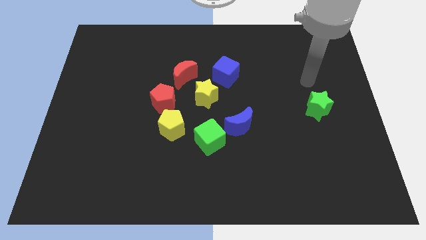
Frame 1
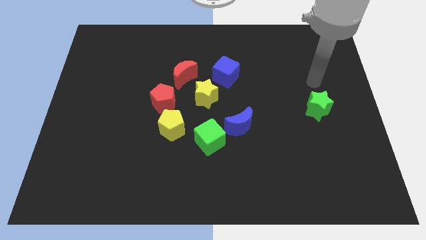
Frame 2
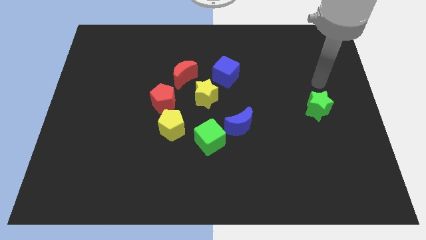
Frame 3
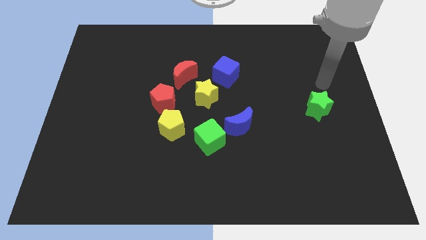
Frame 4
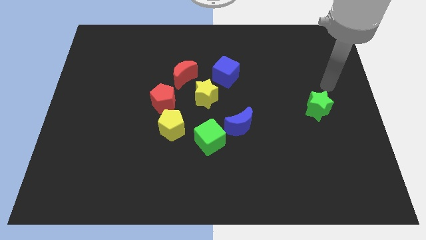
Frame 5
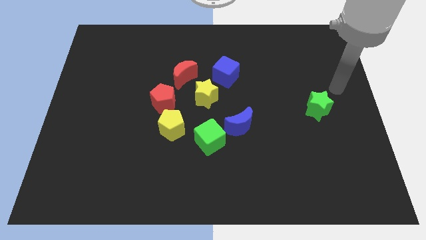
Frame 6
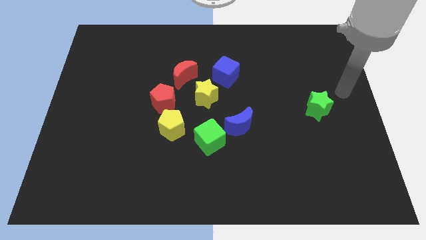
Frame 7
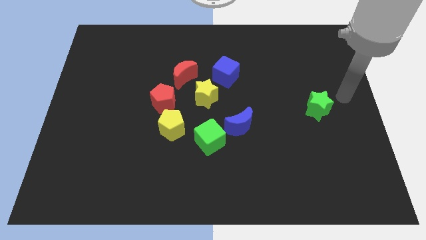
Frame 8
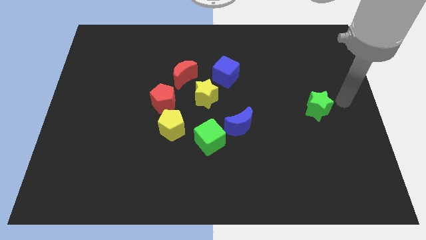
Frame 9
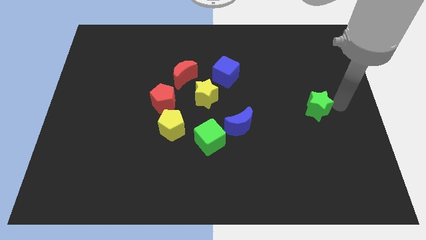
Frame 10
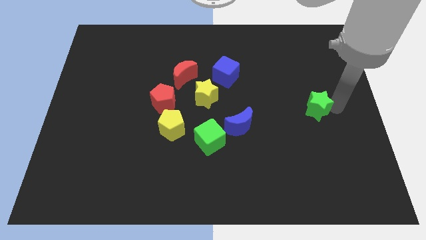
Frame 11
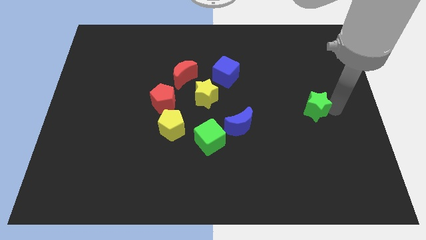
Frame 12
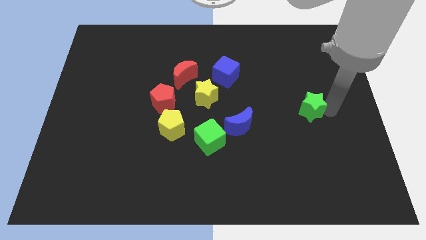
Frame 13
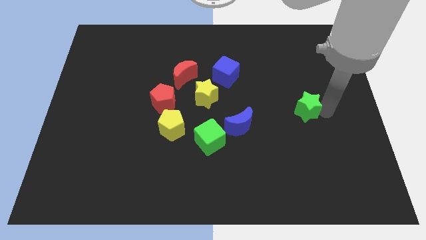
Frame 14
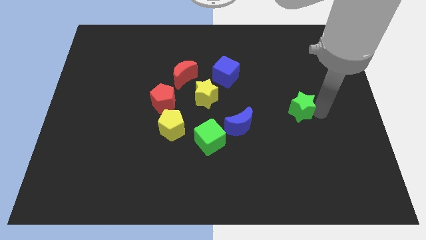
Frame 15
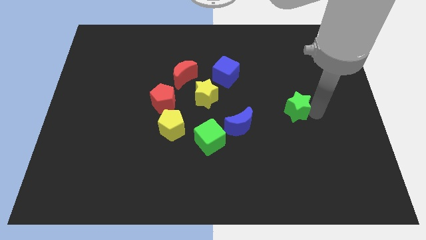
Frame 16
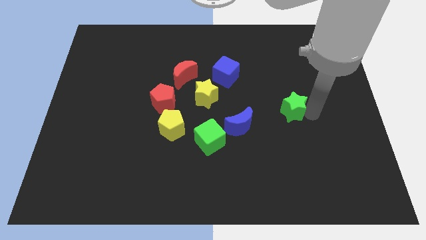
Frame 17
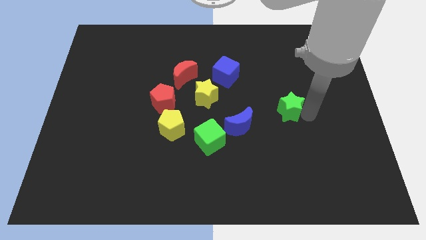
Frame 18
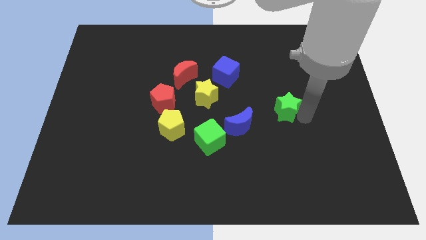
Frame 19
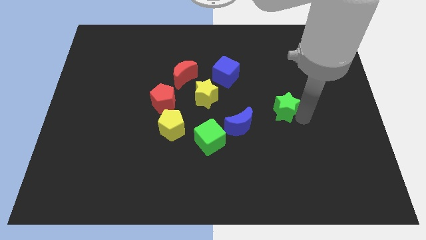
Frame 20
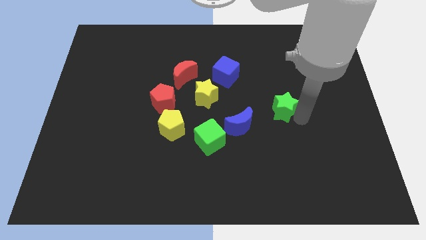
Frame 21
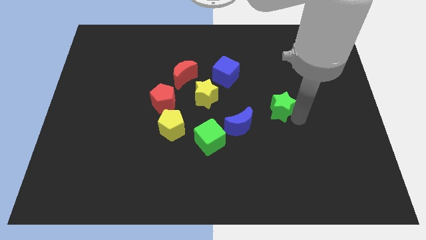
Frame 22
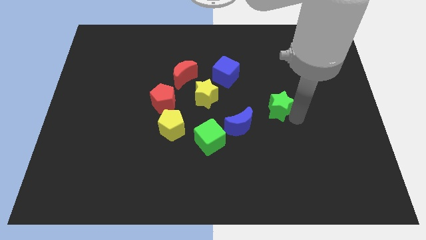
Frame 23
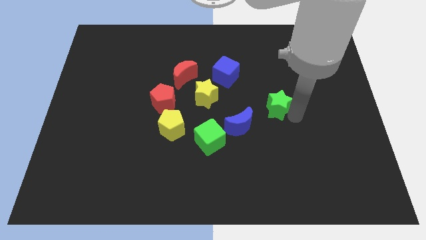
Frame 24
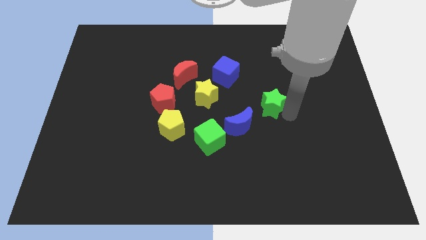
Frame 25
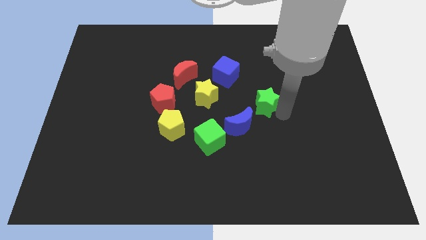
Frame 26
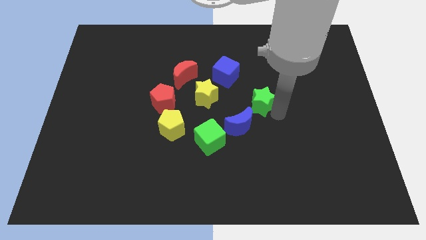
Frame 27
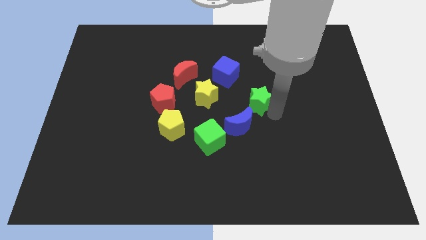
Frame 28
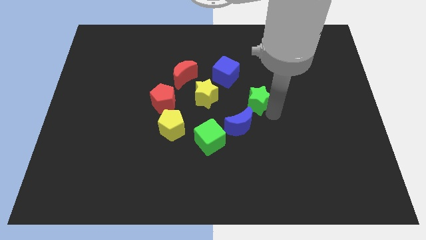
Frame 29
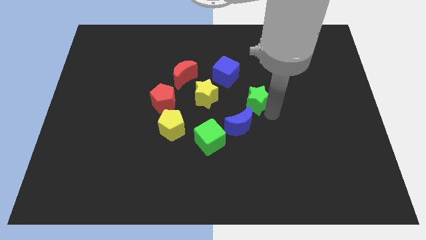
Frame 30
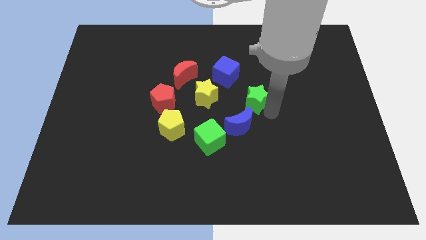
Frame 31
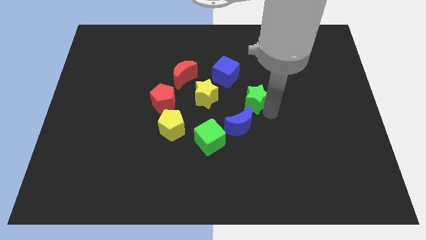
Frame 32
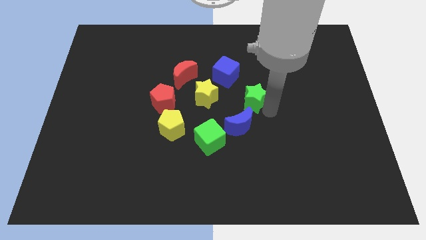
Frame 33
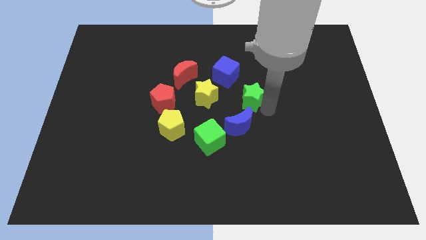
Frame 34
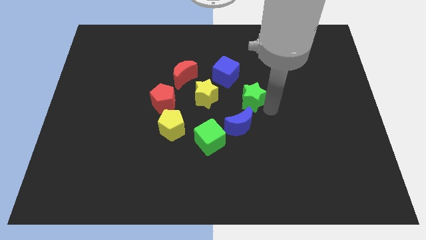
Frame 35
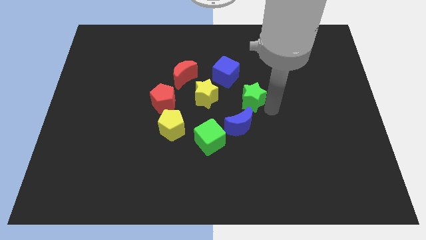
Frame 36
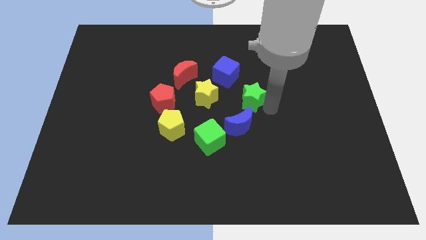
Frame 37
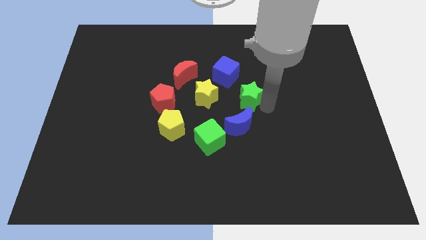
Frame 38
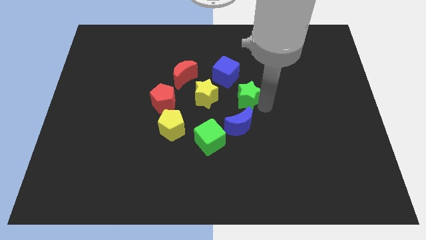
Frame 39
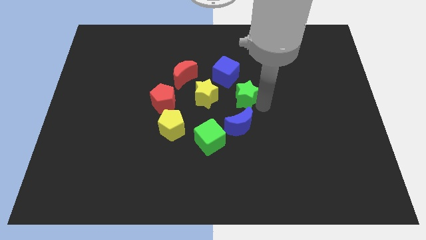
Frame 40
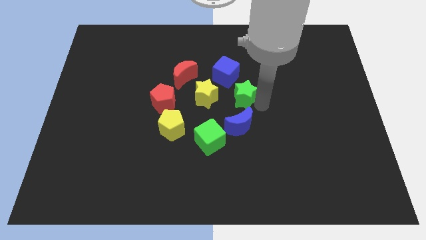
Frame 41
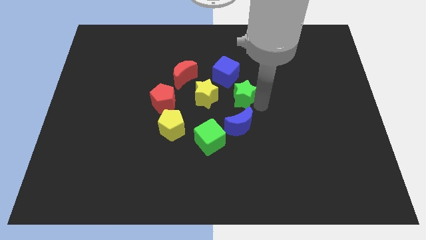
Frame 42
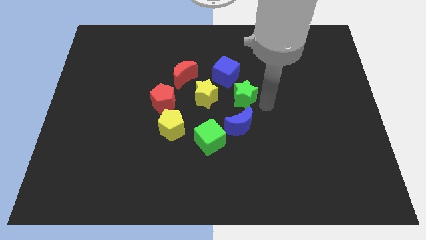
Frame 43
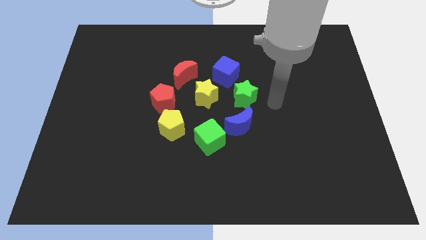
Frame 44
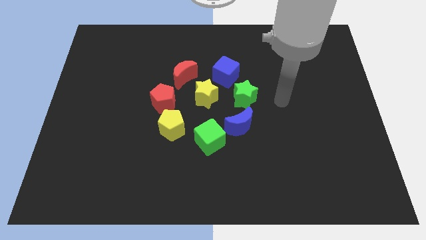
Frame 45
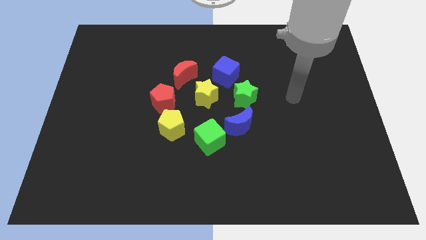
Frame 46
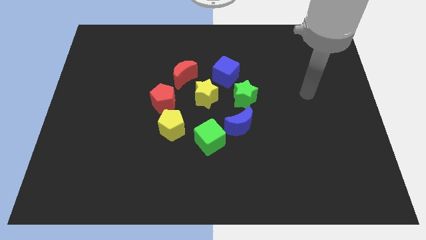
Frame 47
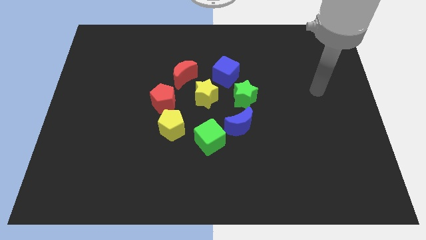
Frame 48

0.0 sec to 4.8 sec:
move green star above blue moon

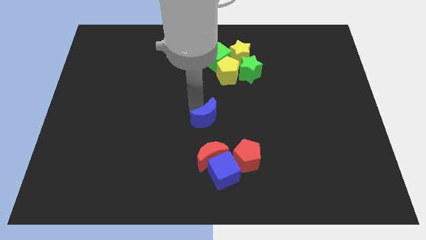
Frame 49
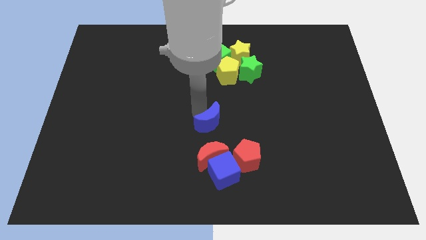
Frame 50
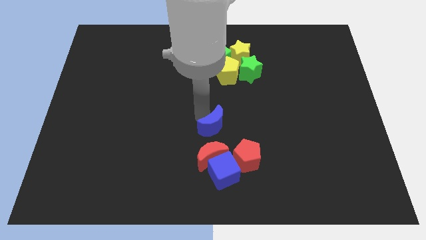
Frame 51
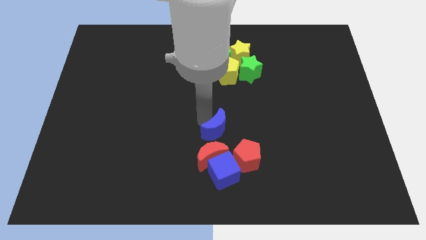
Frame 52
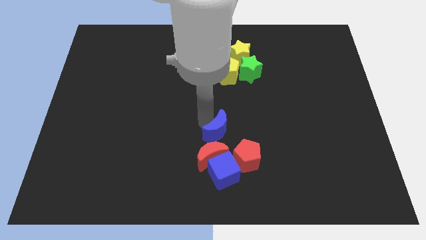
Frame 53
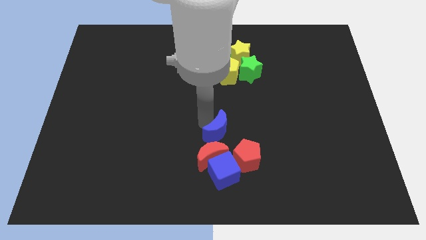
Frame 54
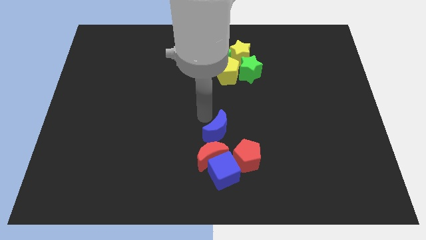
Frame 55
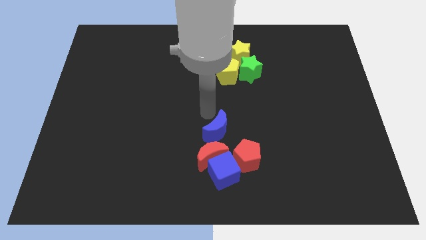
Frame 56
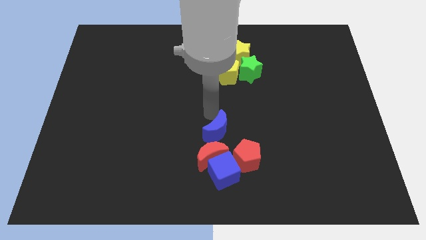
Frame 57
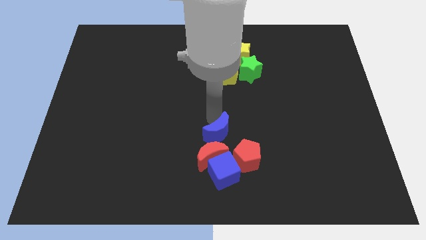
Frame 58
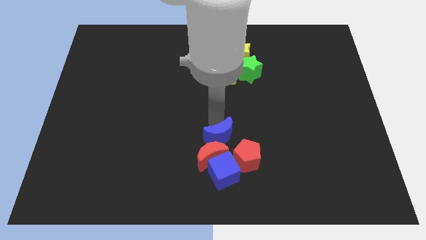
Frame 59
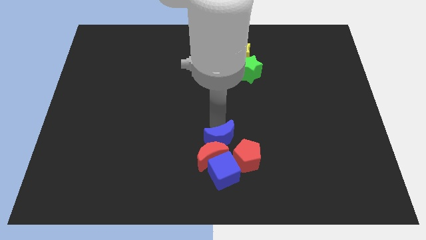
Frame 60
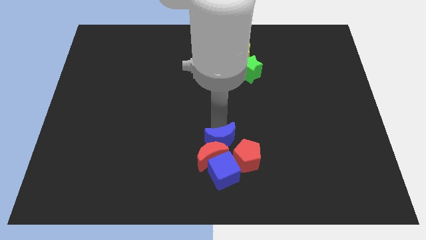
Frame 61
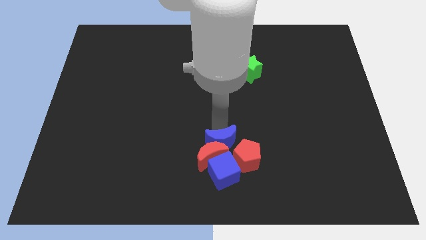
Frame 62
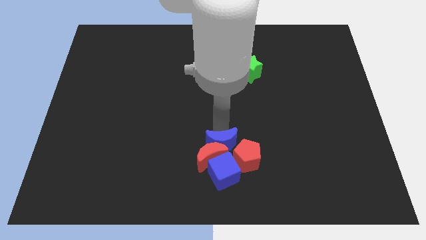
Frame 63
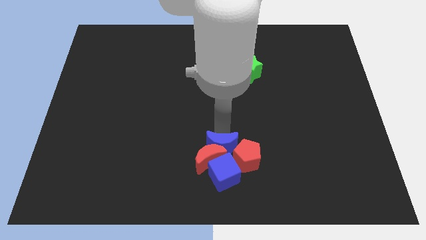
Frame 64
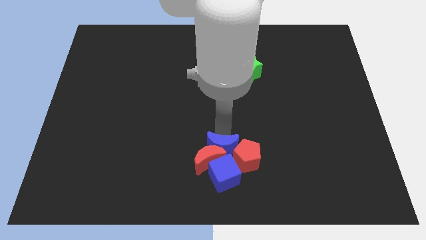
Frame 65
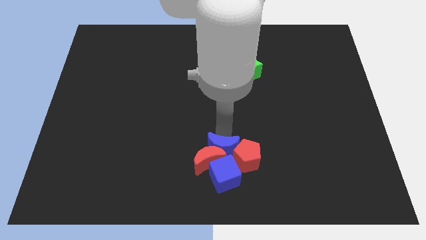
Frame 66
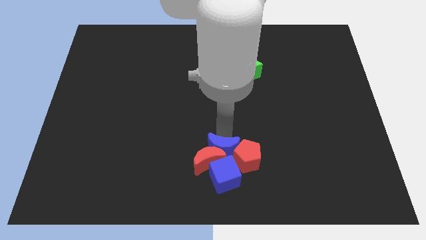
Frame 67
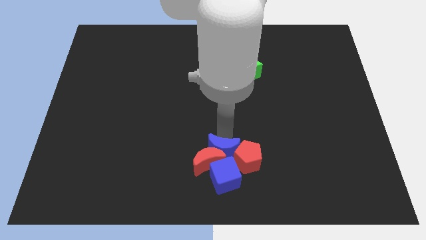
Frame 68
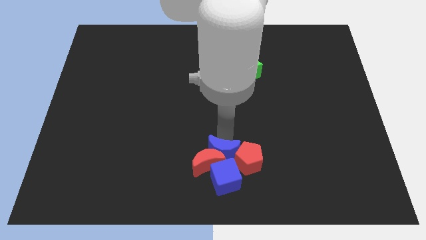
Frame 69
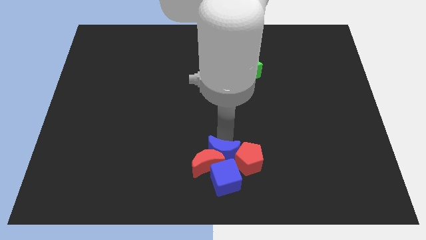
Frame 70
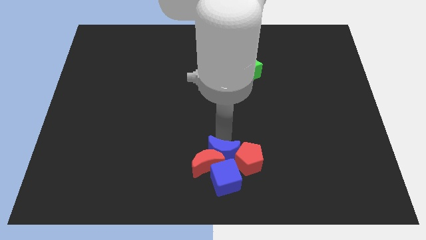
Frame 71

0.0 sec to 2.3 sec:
push the blue crescent into the group of blocks at the bottom centre of the board

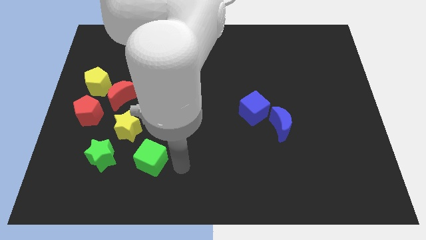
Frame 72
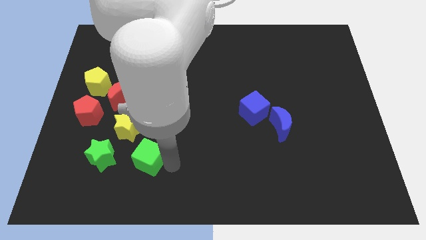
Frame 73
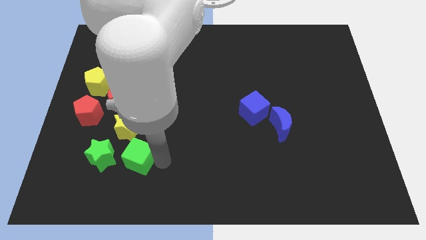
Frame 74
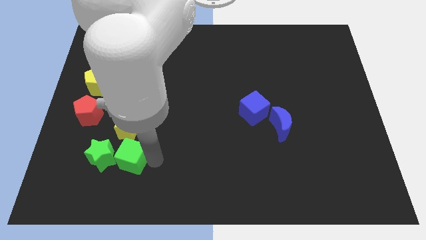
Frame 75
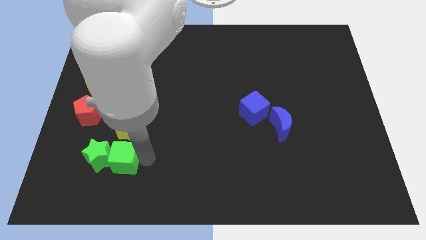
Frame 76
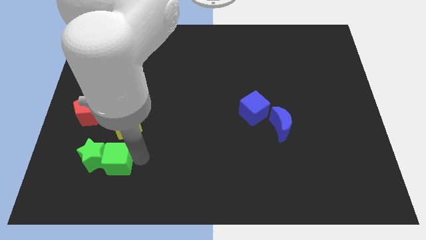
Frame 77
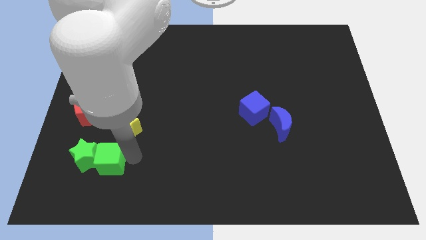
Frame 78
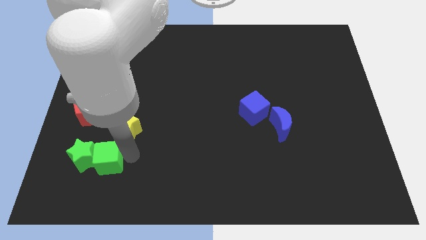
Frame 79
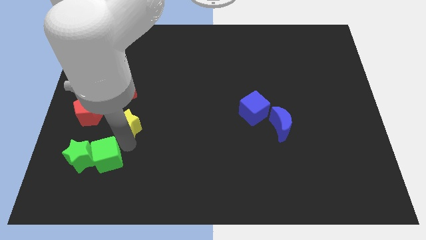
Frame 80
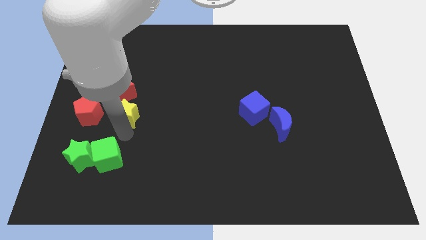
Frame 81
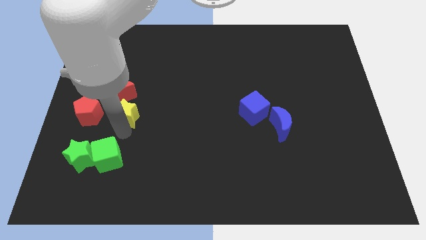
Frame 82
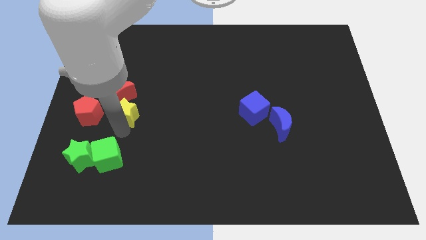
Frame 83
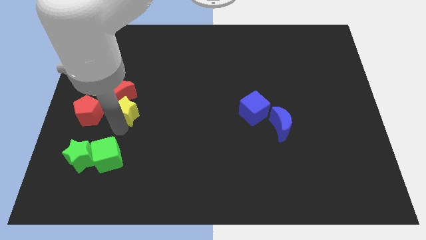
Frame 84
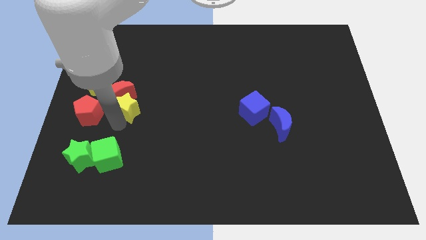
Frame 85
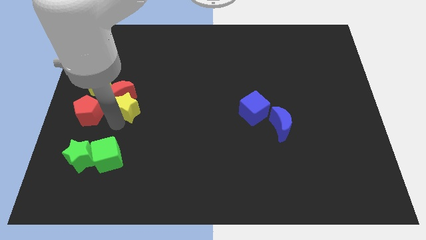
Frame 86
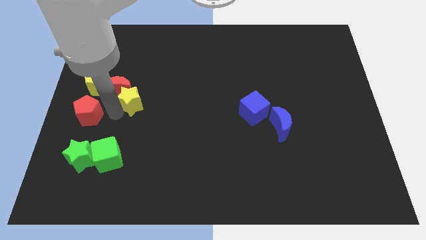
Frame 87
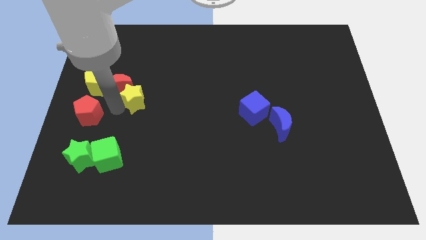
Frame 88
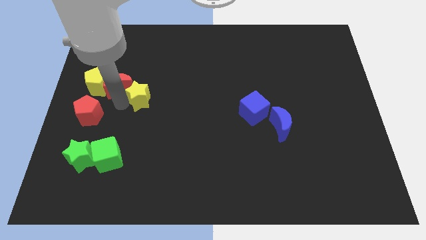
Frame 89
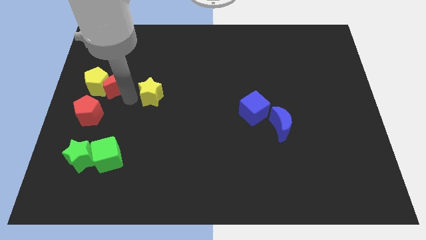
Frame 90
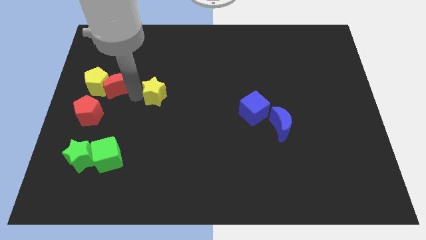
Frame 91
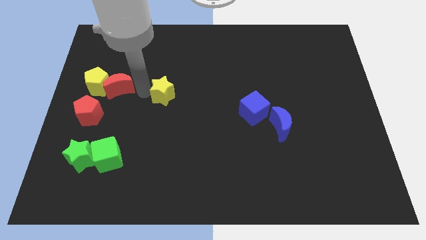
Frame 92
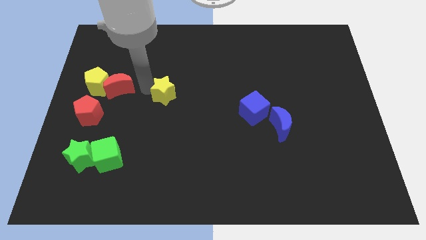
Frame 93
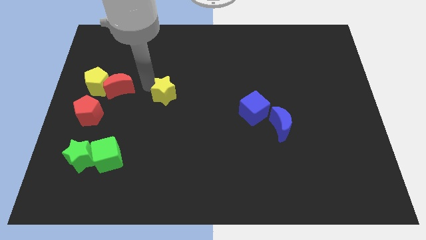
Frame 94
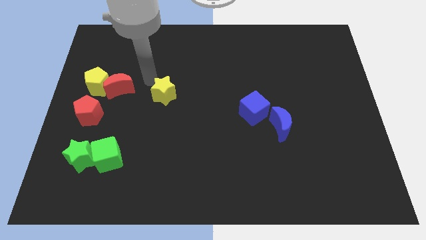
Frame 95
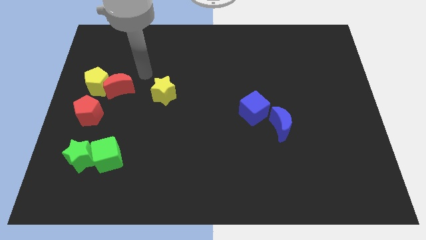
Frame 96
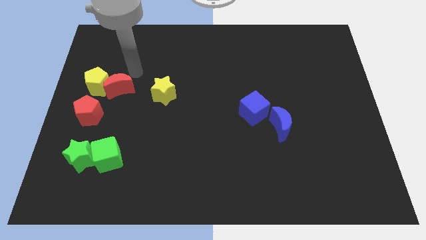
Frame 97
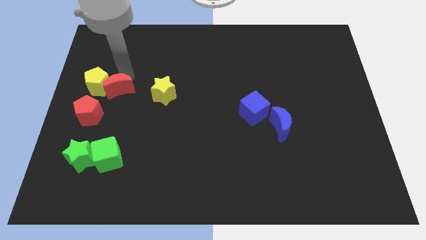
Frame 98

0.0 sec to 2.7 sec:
drag green cube towards green star
